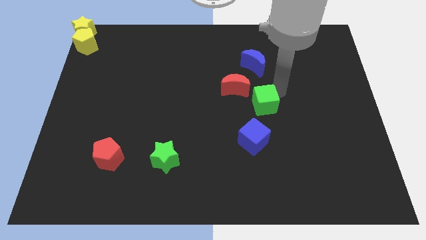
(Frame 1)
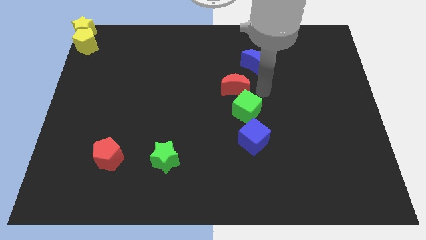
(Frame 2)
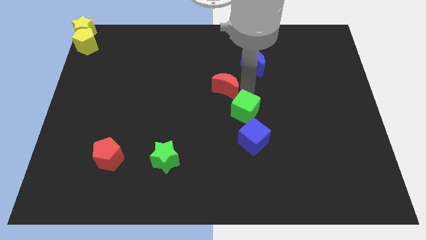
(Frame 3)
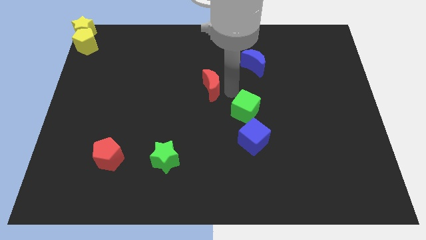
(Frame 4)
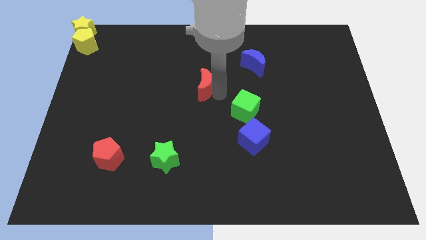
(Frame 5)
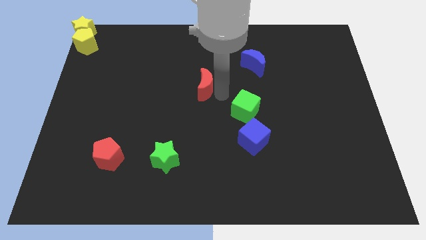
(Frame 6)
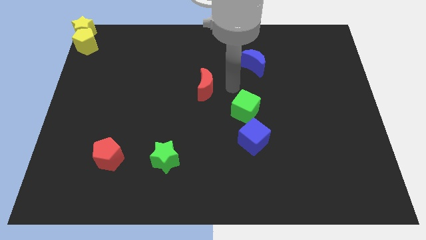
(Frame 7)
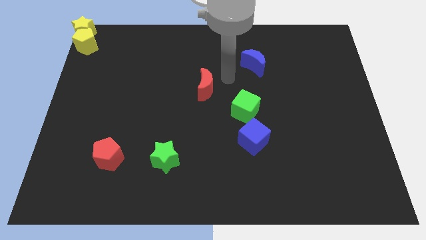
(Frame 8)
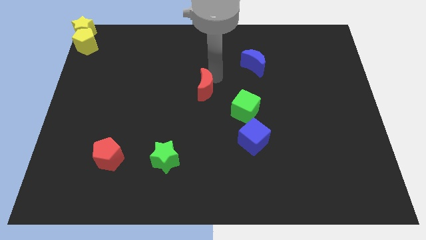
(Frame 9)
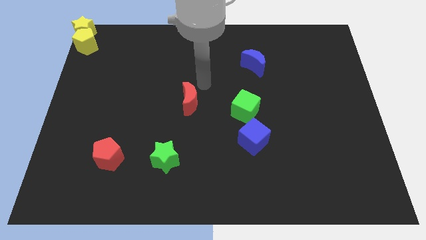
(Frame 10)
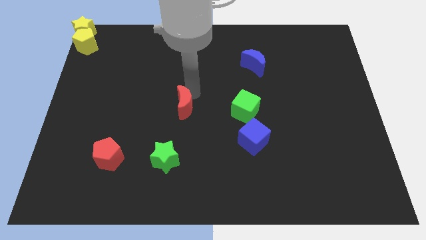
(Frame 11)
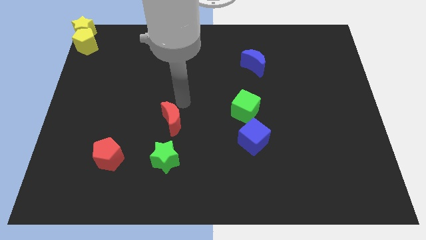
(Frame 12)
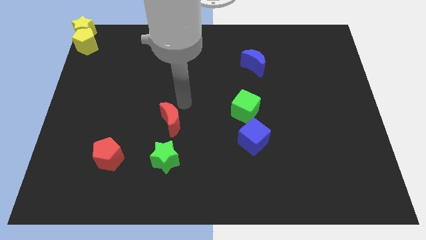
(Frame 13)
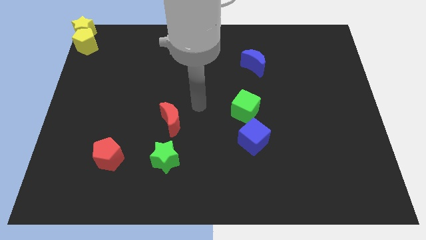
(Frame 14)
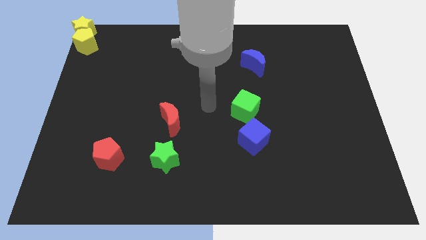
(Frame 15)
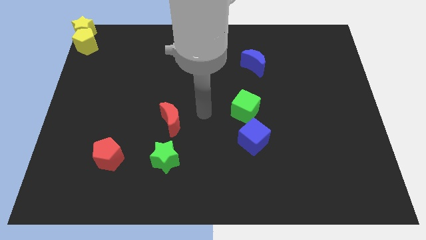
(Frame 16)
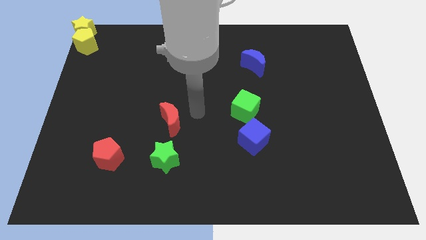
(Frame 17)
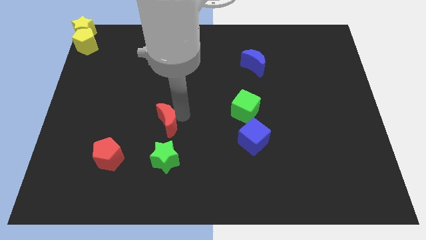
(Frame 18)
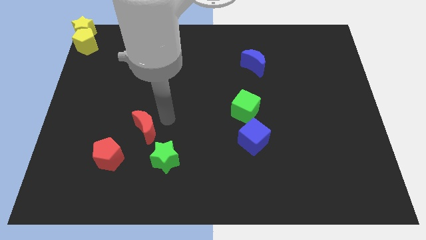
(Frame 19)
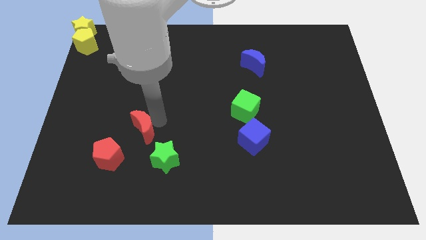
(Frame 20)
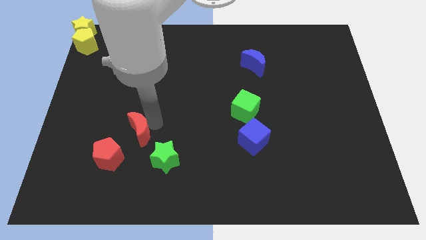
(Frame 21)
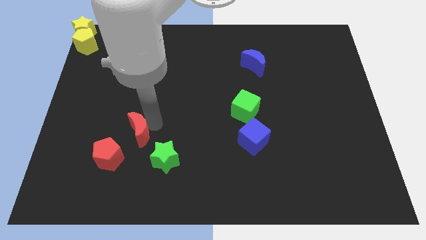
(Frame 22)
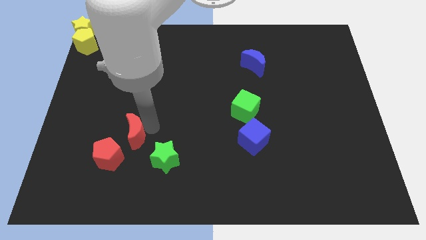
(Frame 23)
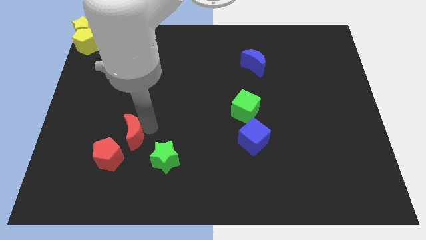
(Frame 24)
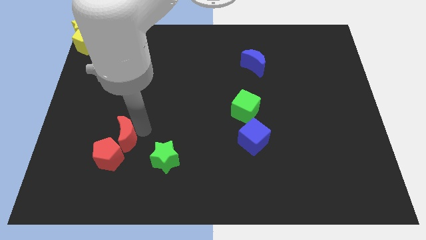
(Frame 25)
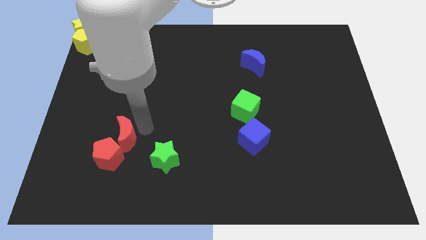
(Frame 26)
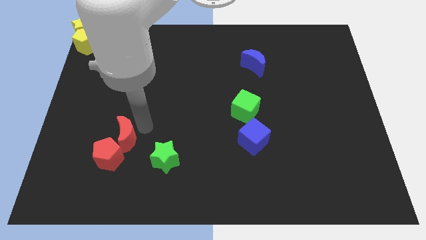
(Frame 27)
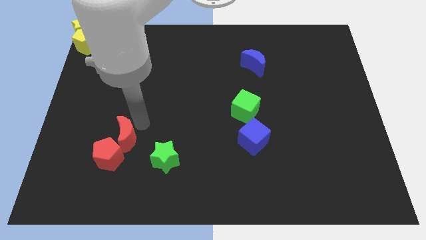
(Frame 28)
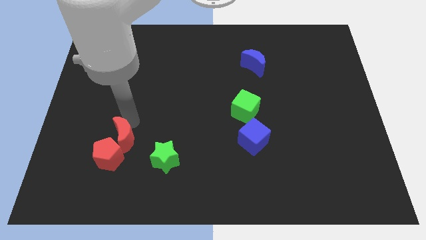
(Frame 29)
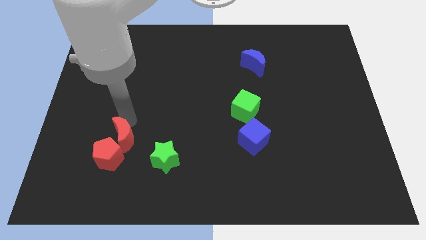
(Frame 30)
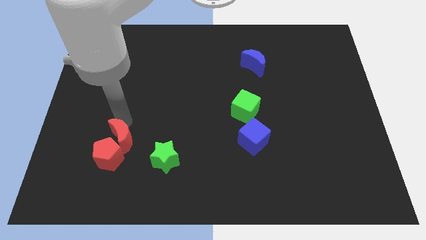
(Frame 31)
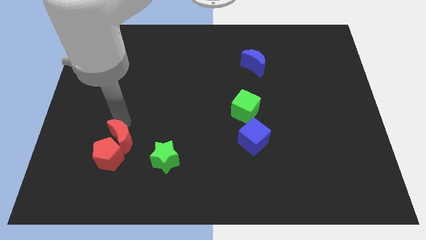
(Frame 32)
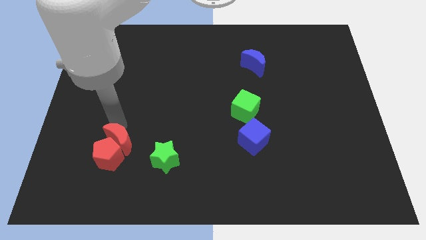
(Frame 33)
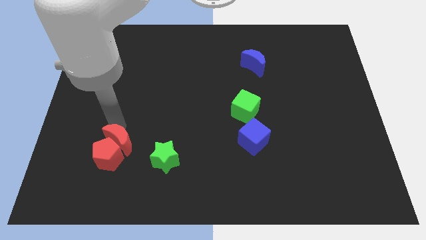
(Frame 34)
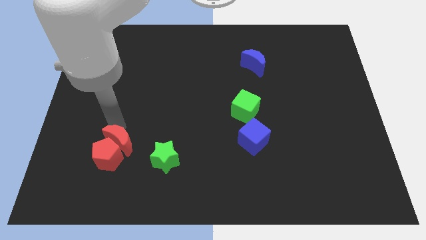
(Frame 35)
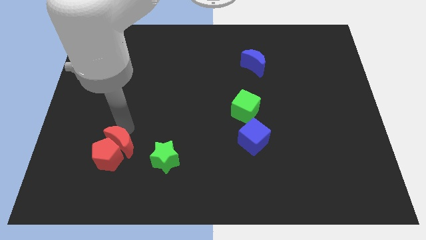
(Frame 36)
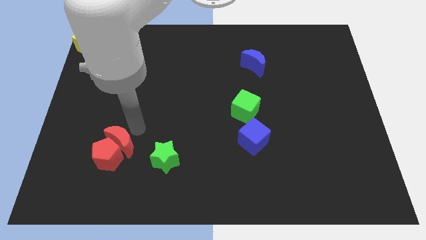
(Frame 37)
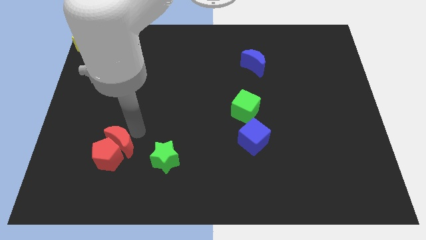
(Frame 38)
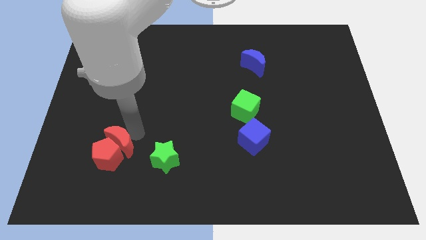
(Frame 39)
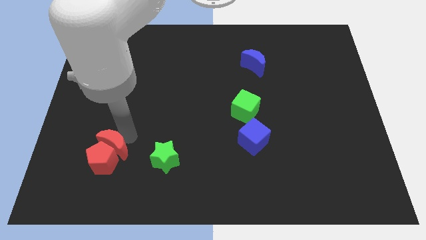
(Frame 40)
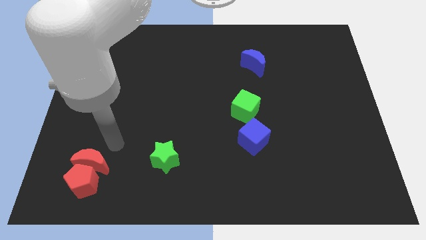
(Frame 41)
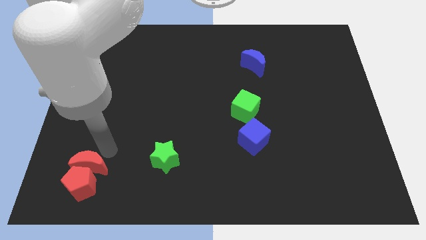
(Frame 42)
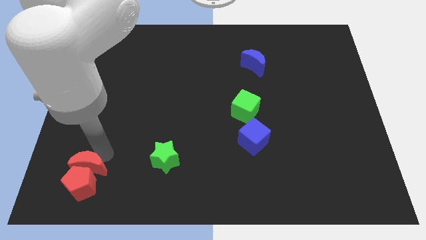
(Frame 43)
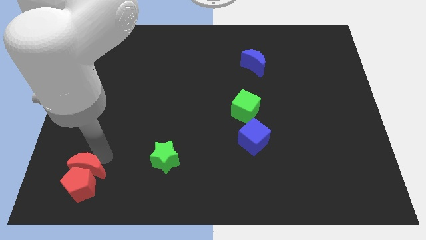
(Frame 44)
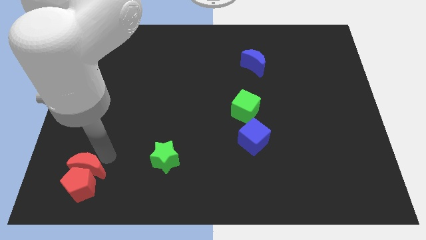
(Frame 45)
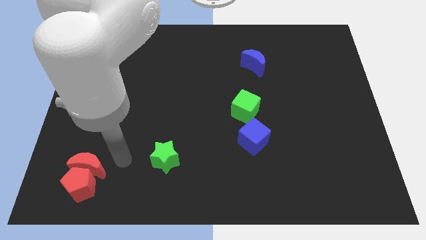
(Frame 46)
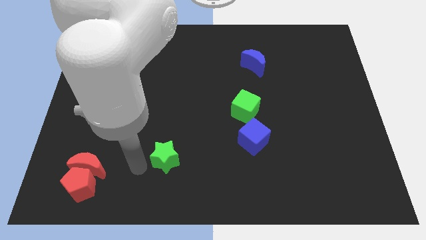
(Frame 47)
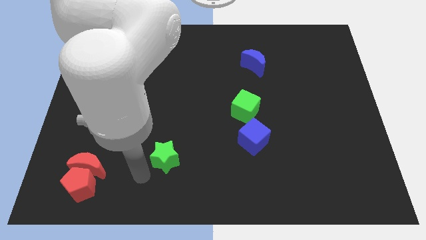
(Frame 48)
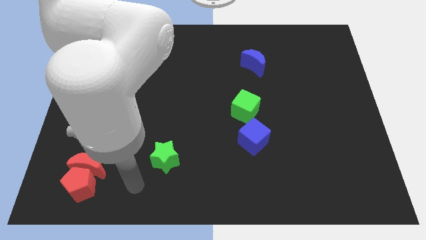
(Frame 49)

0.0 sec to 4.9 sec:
place the red crescent above the red pentagon

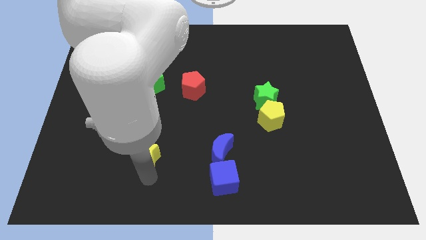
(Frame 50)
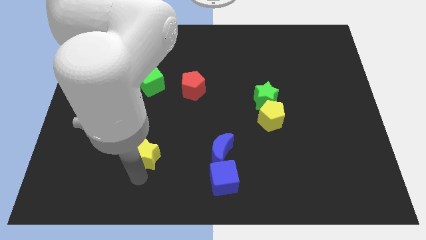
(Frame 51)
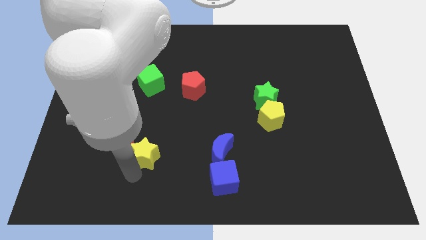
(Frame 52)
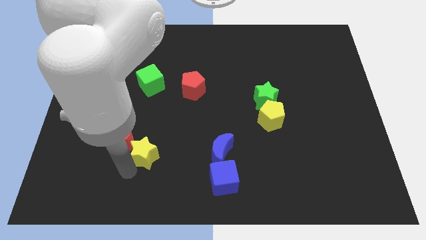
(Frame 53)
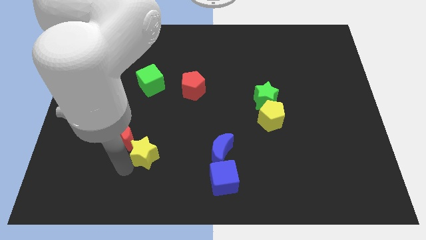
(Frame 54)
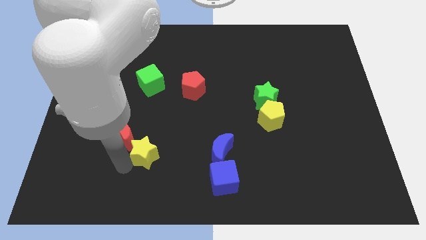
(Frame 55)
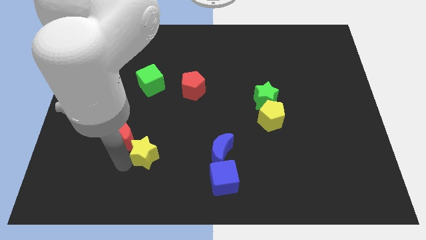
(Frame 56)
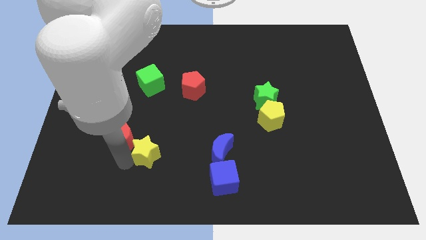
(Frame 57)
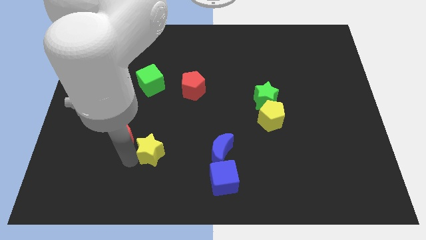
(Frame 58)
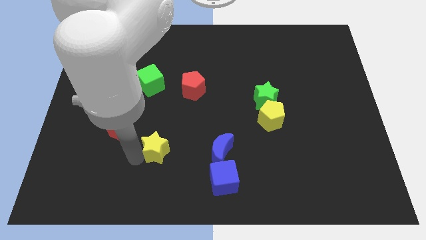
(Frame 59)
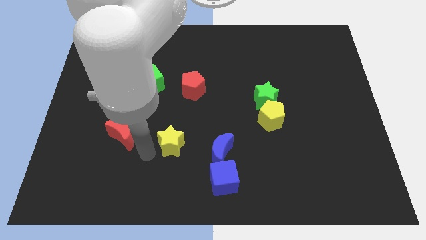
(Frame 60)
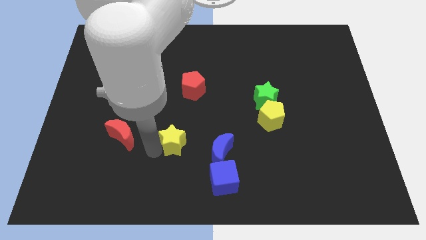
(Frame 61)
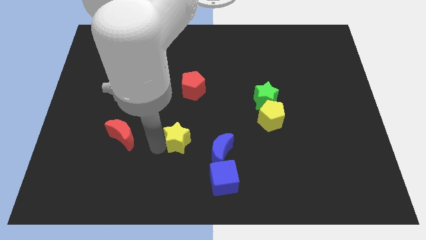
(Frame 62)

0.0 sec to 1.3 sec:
push the yellow star to the left of the blue crescent

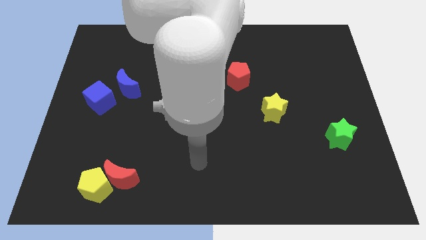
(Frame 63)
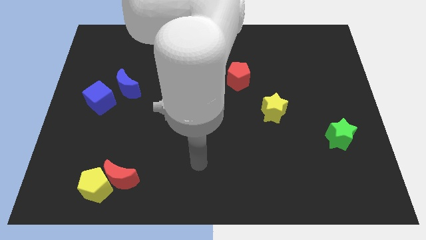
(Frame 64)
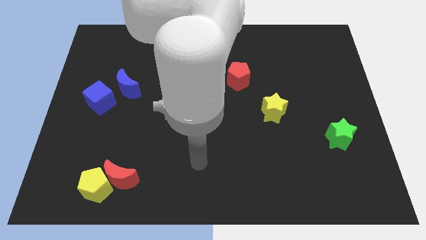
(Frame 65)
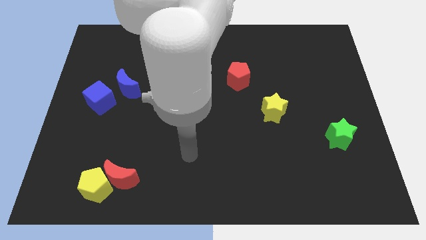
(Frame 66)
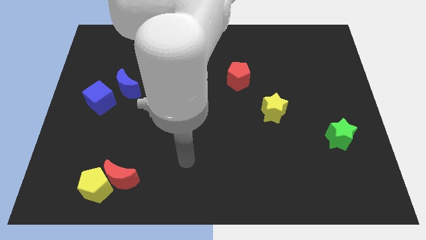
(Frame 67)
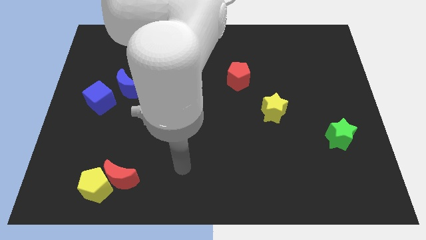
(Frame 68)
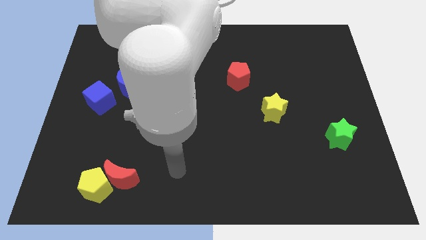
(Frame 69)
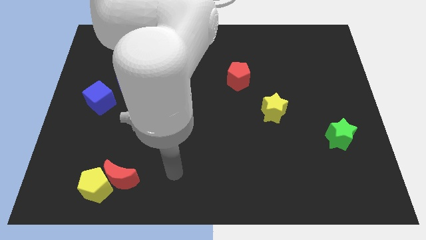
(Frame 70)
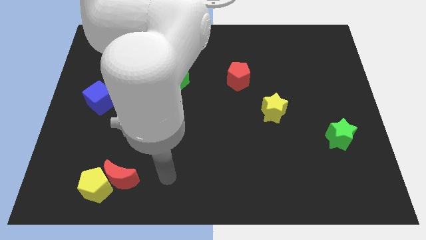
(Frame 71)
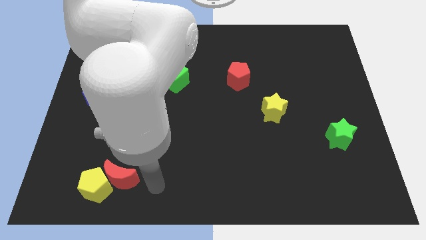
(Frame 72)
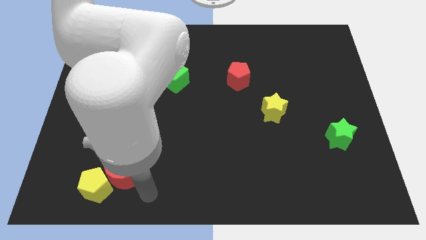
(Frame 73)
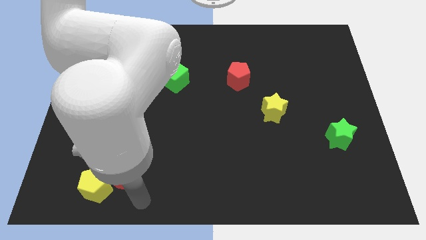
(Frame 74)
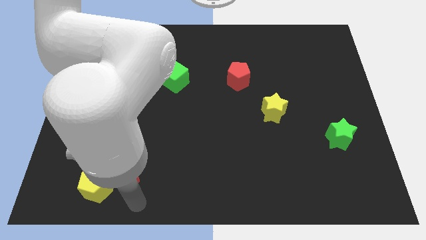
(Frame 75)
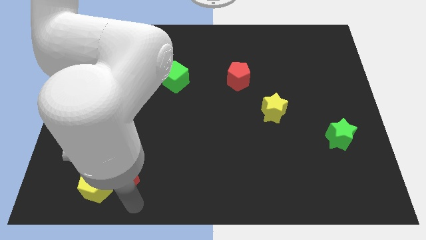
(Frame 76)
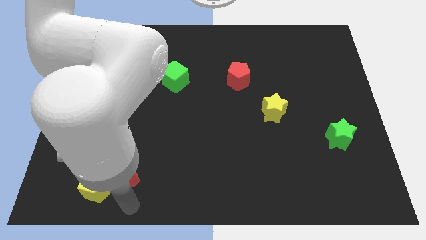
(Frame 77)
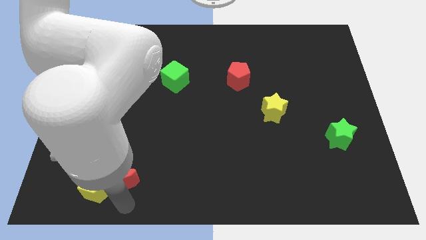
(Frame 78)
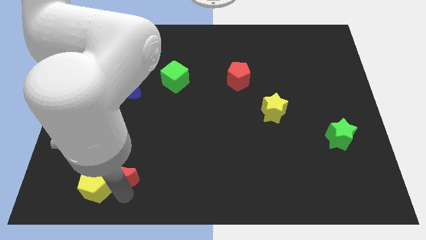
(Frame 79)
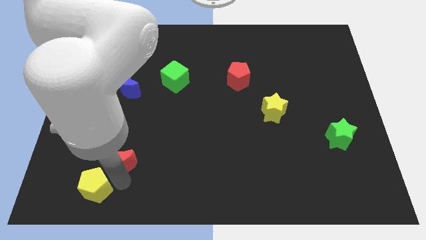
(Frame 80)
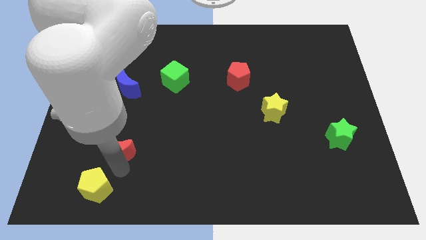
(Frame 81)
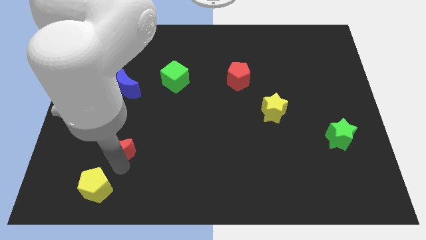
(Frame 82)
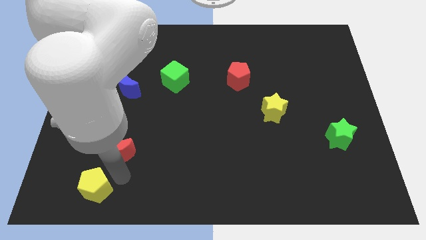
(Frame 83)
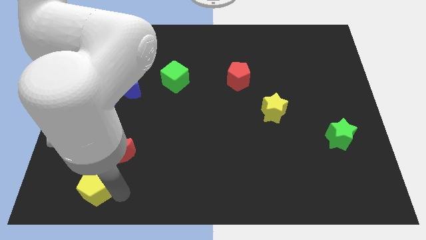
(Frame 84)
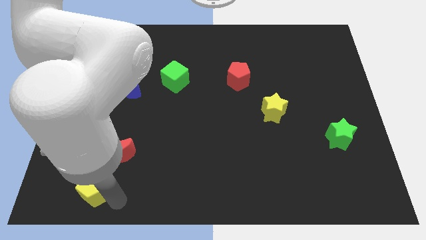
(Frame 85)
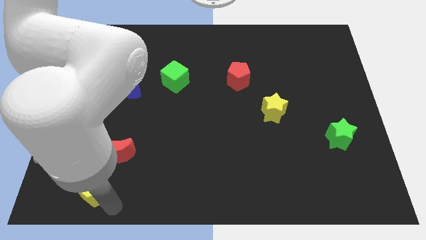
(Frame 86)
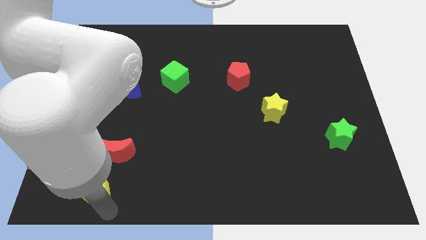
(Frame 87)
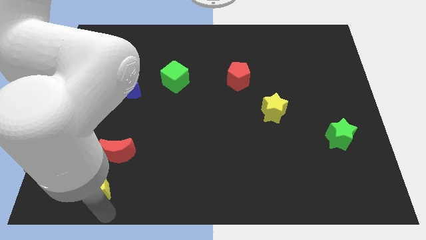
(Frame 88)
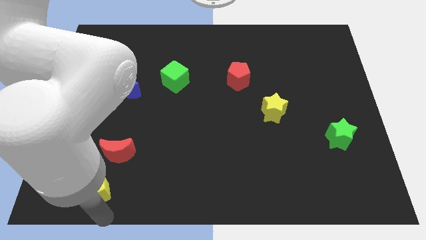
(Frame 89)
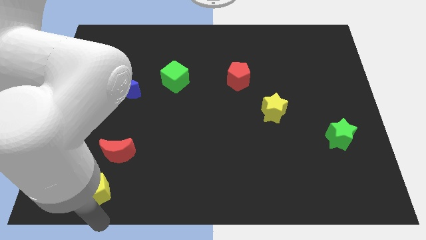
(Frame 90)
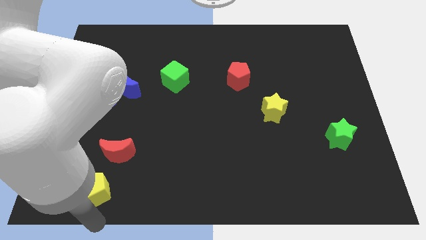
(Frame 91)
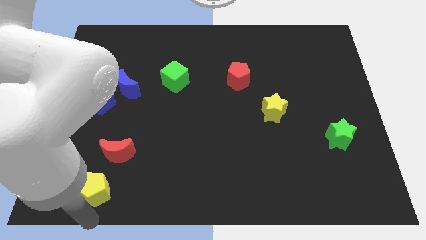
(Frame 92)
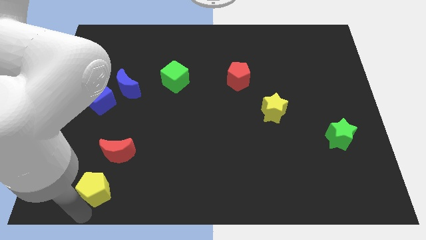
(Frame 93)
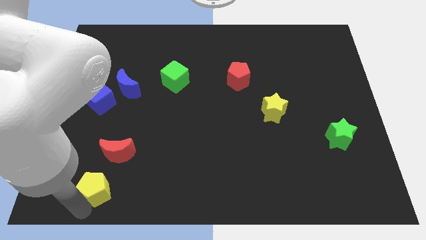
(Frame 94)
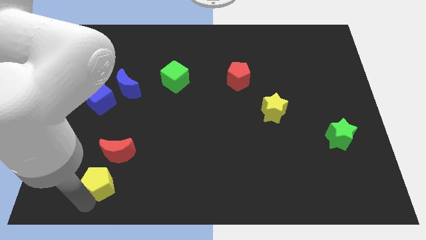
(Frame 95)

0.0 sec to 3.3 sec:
separate the yellow pentagon and red crescent
